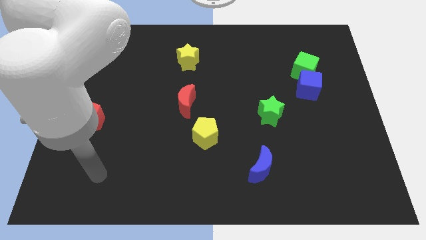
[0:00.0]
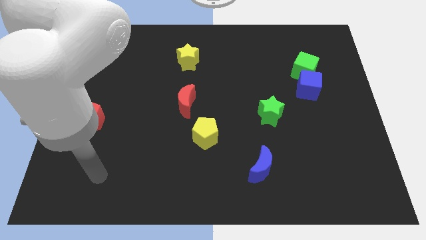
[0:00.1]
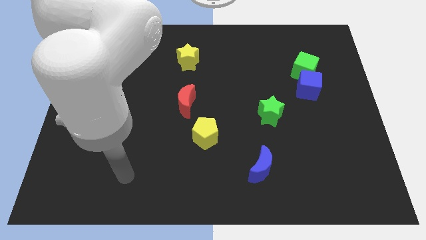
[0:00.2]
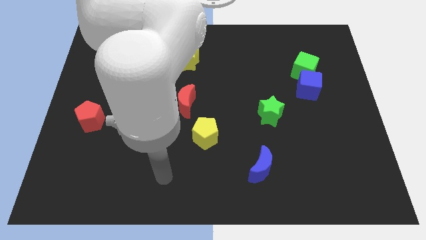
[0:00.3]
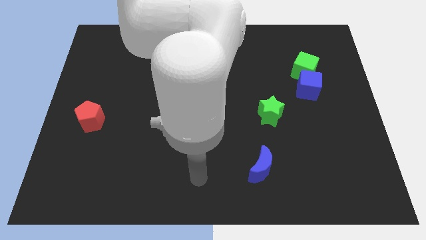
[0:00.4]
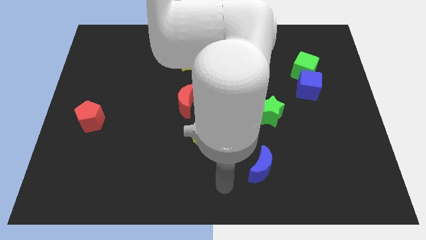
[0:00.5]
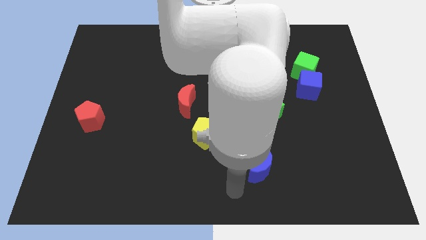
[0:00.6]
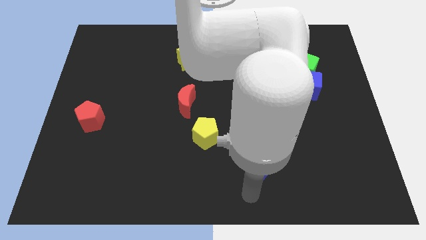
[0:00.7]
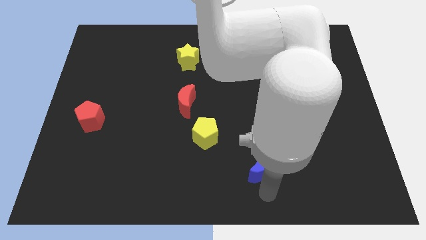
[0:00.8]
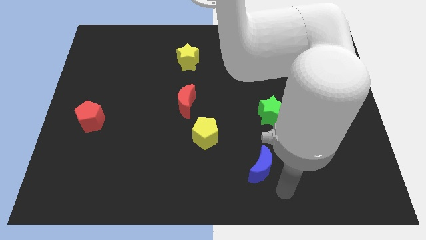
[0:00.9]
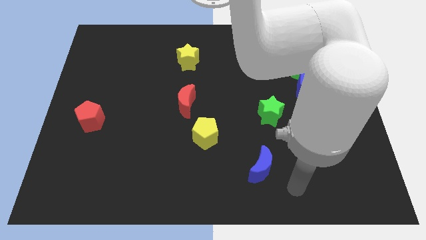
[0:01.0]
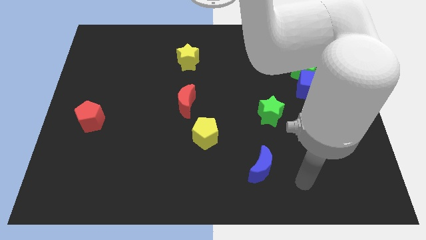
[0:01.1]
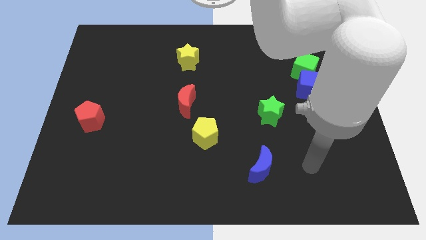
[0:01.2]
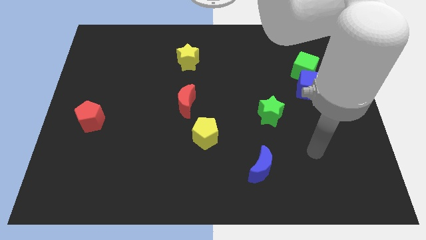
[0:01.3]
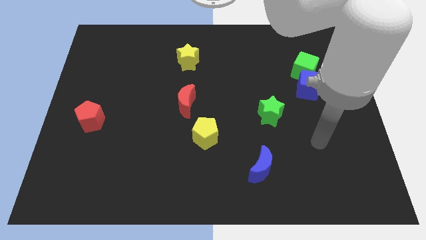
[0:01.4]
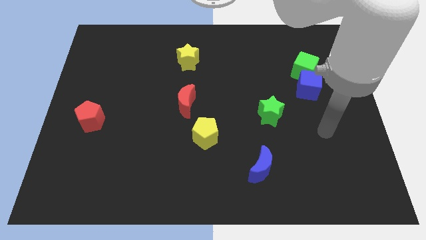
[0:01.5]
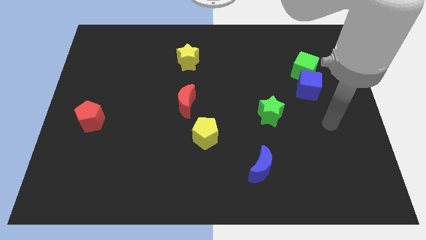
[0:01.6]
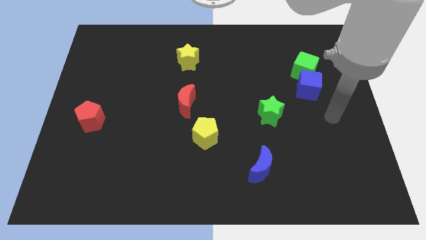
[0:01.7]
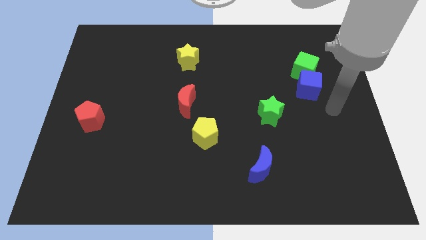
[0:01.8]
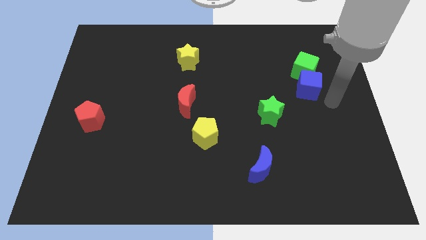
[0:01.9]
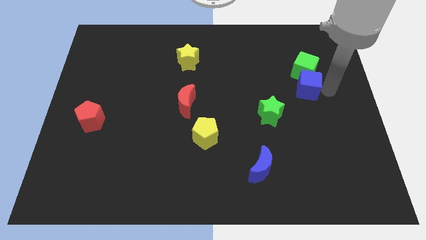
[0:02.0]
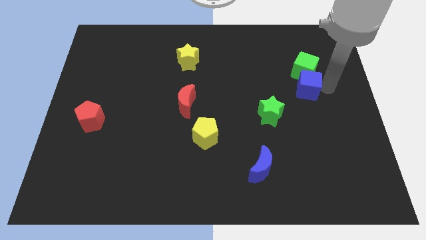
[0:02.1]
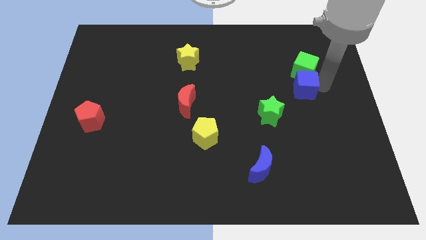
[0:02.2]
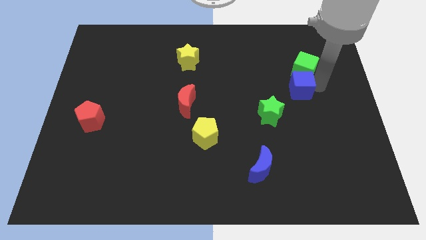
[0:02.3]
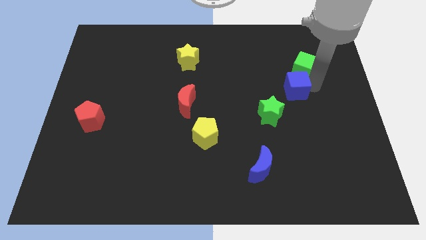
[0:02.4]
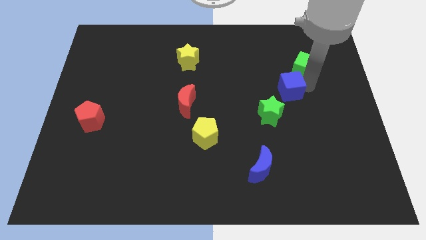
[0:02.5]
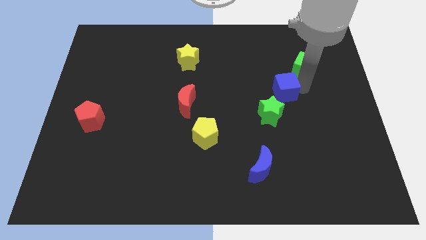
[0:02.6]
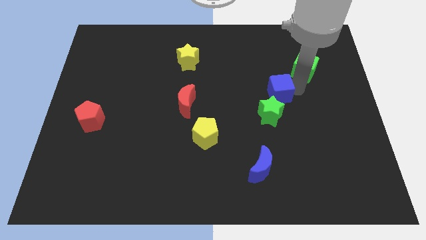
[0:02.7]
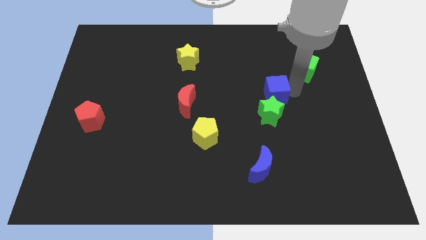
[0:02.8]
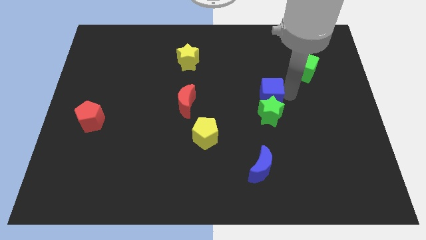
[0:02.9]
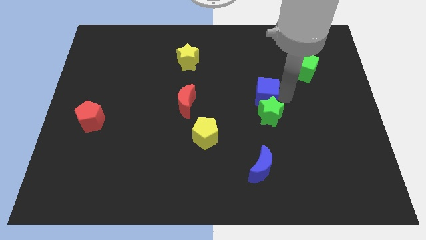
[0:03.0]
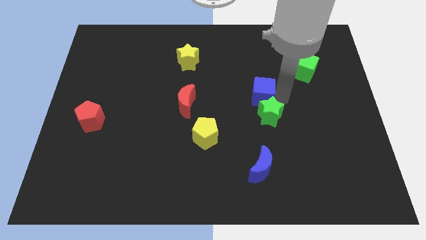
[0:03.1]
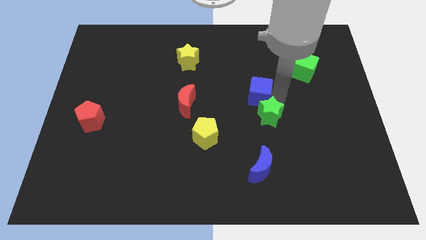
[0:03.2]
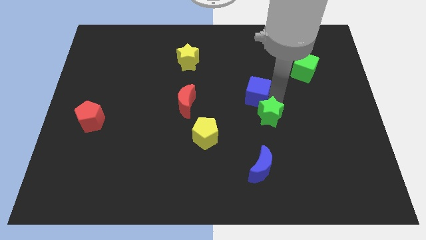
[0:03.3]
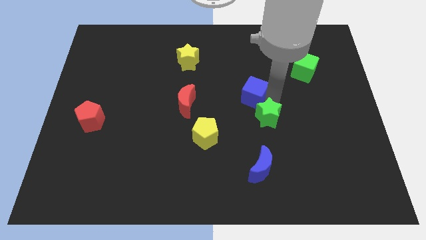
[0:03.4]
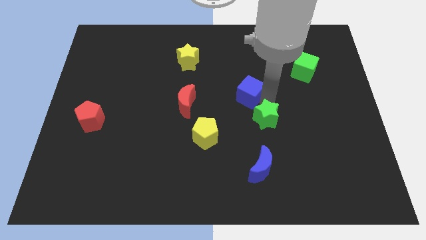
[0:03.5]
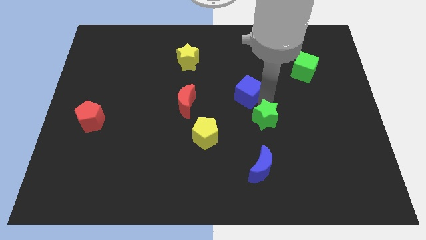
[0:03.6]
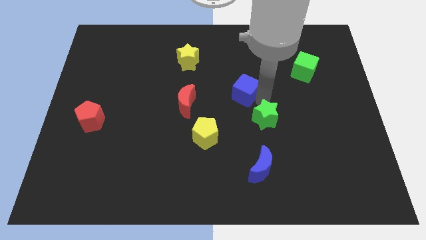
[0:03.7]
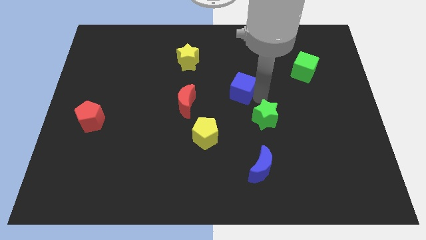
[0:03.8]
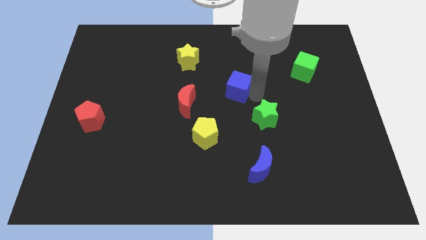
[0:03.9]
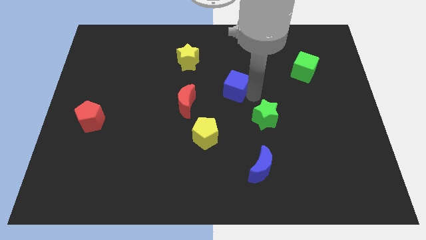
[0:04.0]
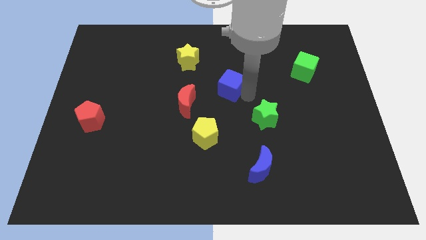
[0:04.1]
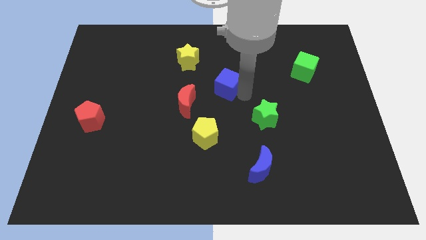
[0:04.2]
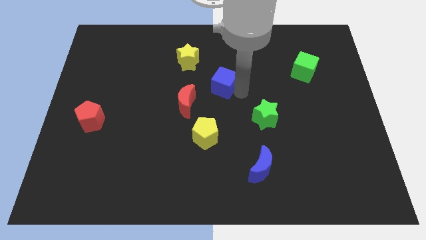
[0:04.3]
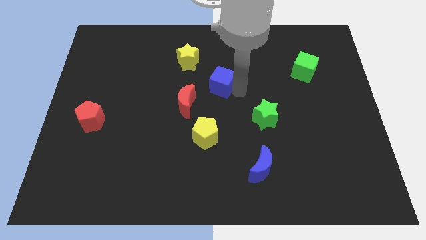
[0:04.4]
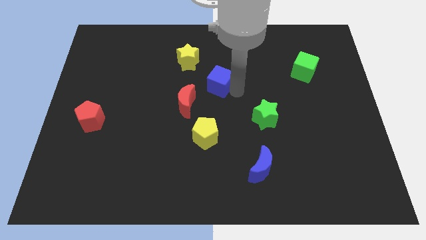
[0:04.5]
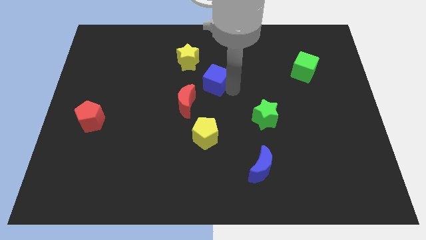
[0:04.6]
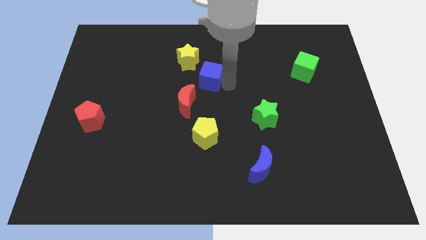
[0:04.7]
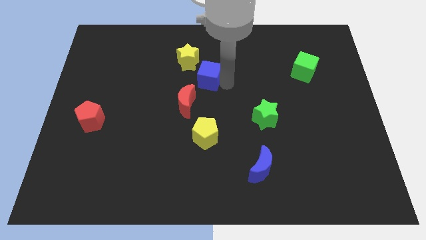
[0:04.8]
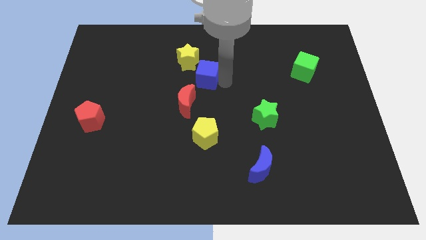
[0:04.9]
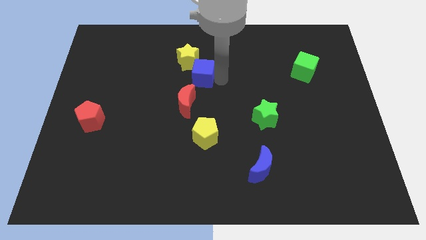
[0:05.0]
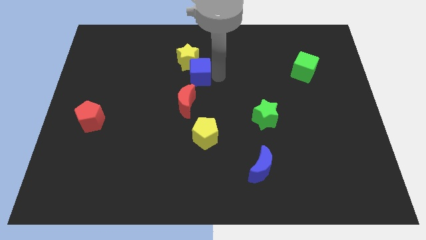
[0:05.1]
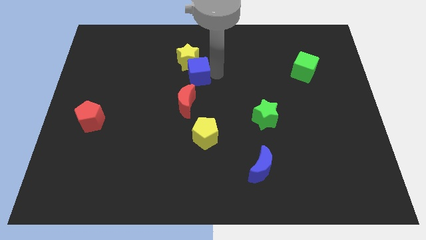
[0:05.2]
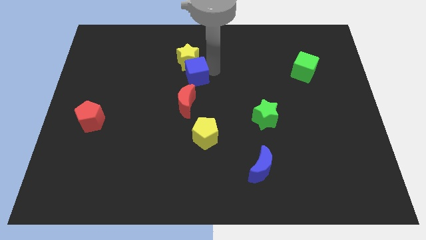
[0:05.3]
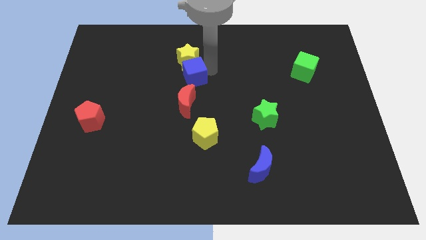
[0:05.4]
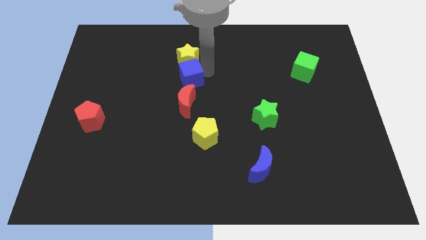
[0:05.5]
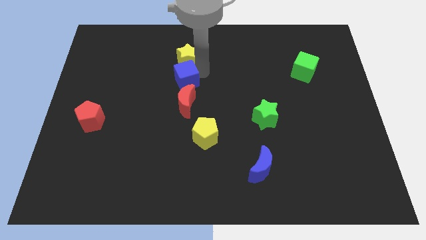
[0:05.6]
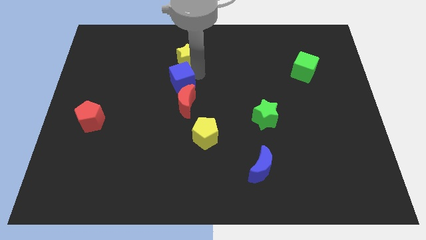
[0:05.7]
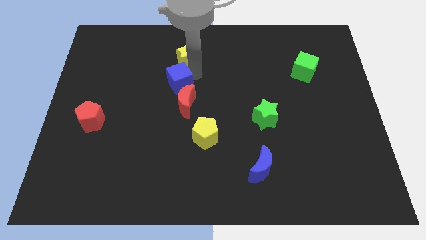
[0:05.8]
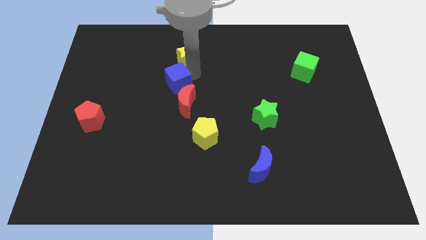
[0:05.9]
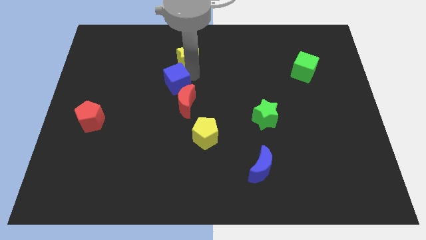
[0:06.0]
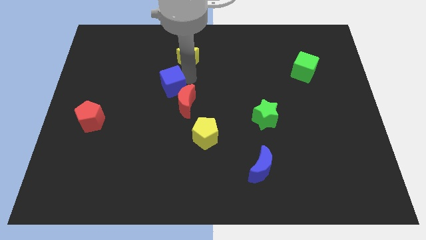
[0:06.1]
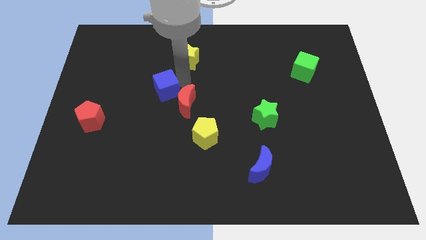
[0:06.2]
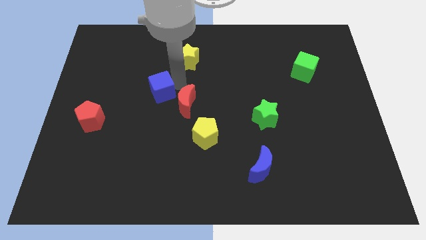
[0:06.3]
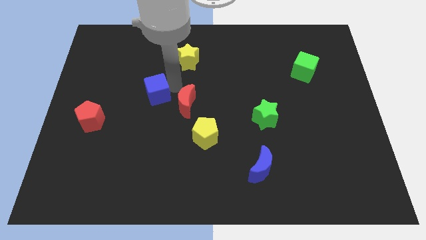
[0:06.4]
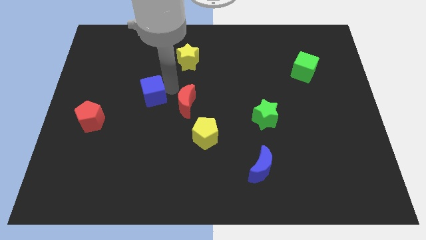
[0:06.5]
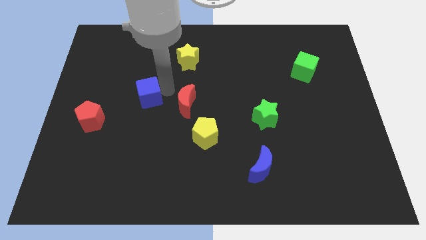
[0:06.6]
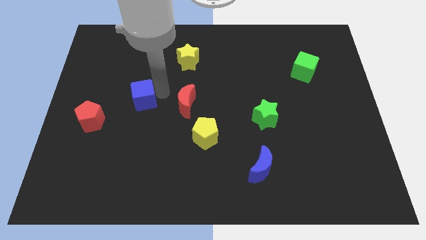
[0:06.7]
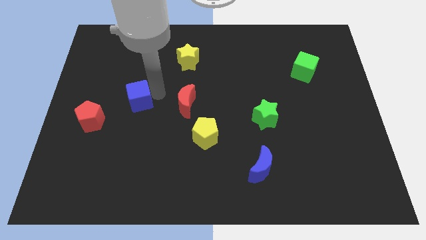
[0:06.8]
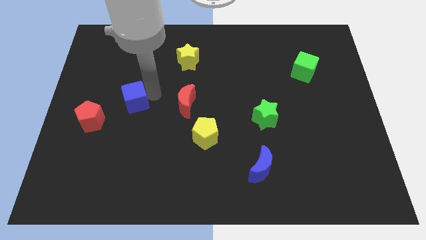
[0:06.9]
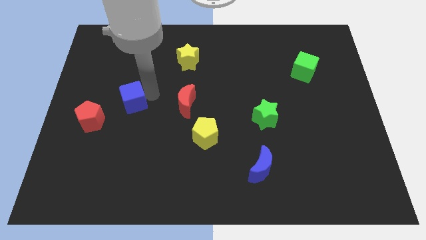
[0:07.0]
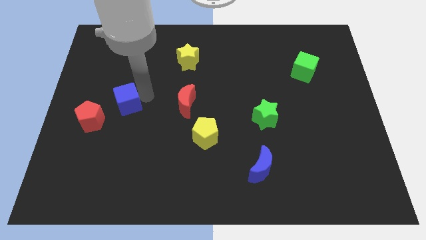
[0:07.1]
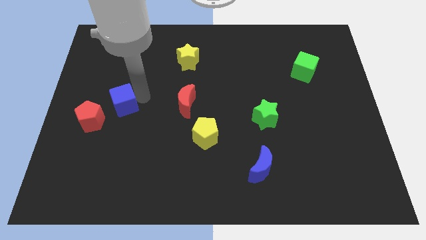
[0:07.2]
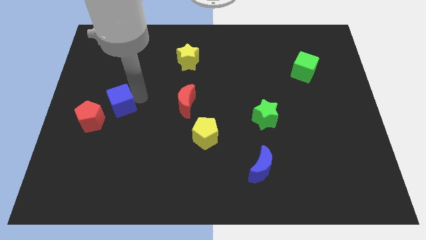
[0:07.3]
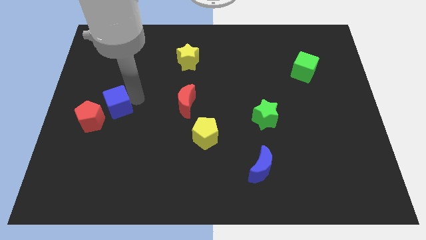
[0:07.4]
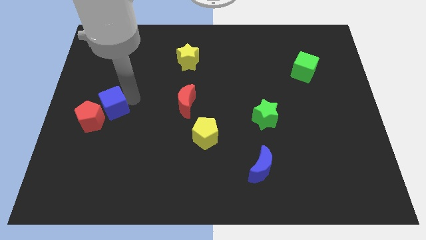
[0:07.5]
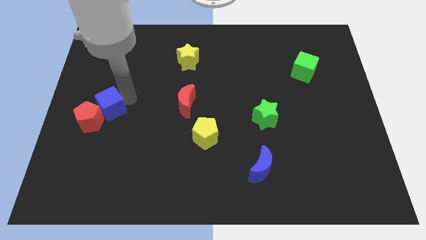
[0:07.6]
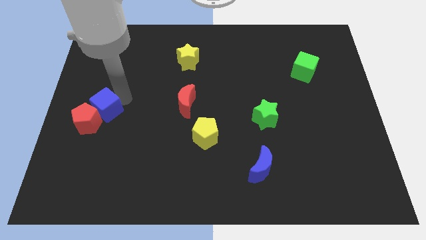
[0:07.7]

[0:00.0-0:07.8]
put the blue cube next to the red pentagon
